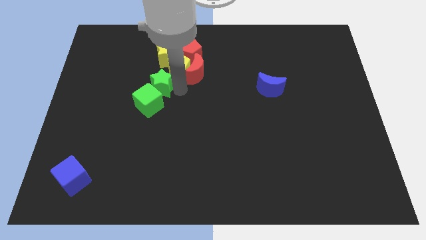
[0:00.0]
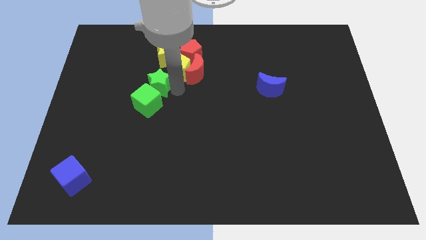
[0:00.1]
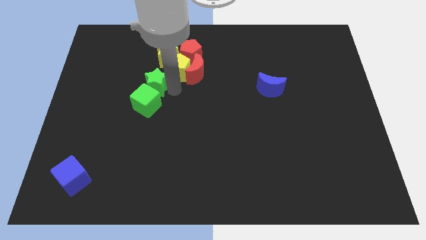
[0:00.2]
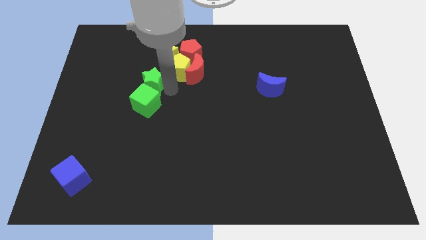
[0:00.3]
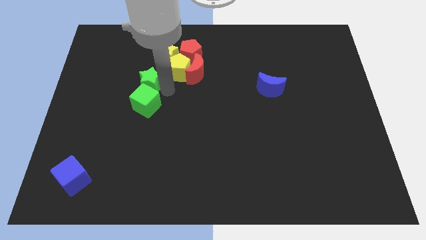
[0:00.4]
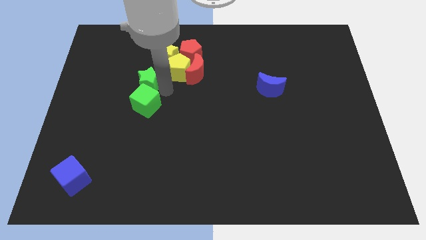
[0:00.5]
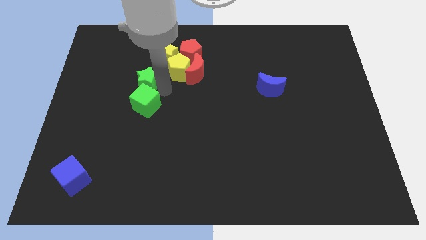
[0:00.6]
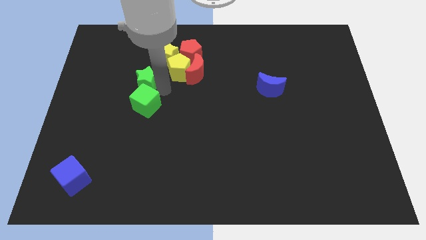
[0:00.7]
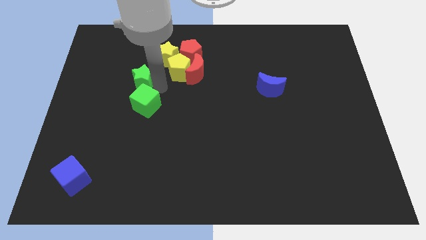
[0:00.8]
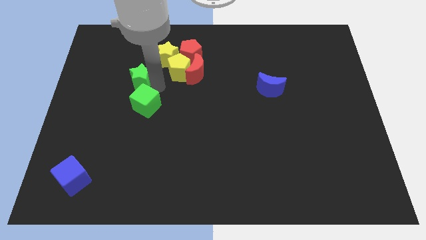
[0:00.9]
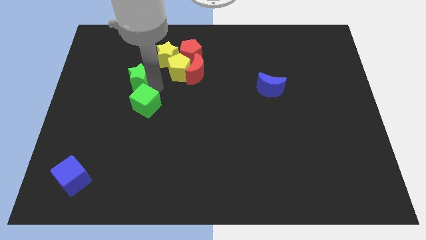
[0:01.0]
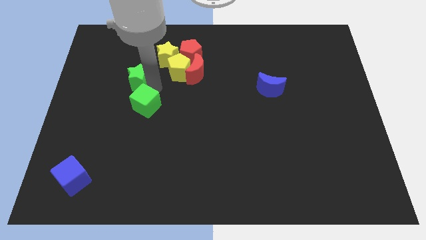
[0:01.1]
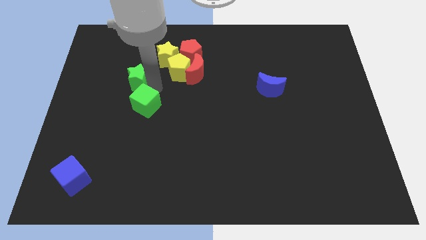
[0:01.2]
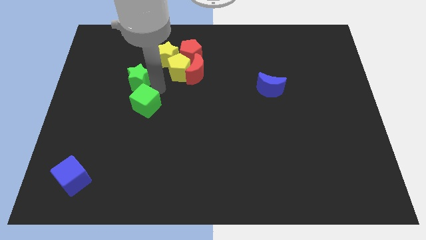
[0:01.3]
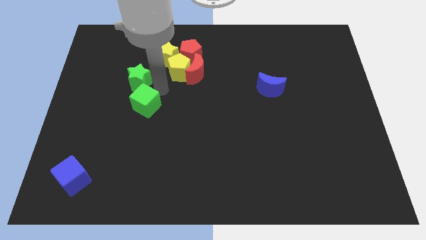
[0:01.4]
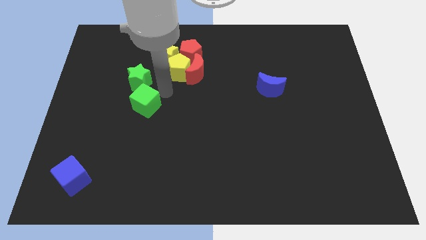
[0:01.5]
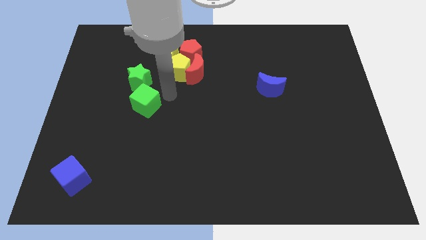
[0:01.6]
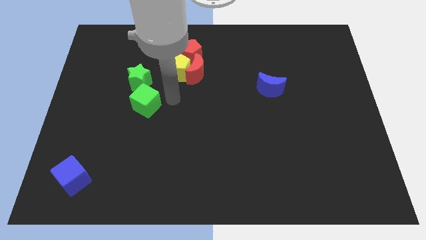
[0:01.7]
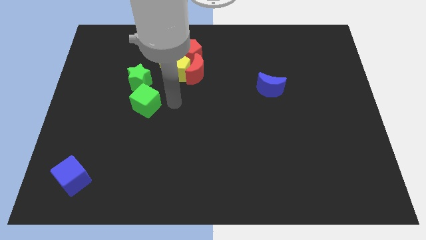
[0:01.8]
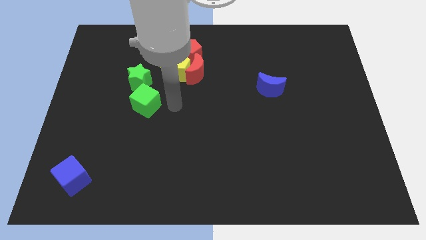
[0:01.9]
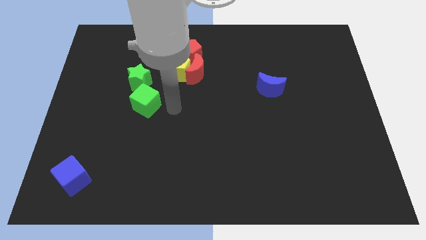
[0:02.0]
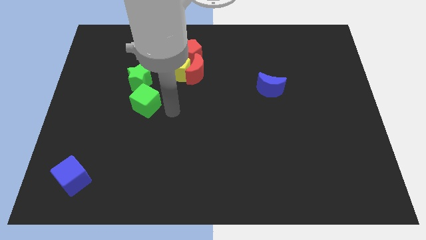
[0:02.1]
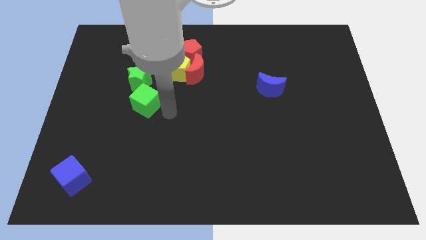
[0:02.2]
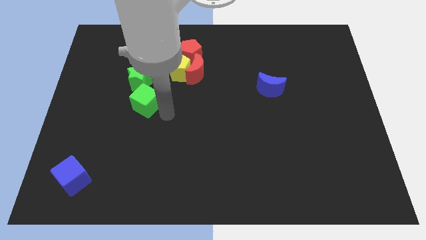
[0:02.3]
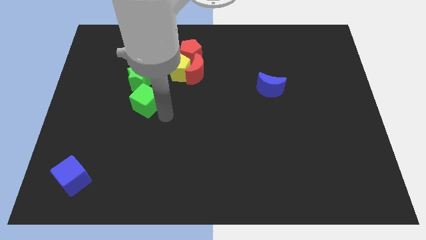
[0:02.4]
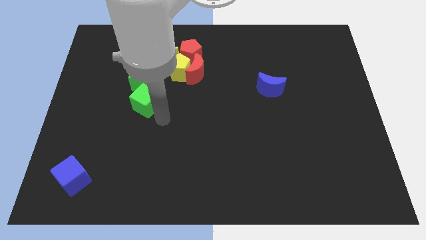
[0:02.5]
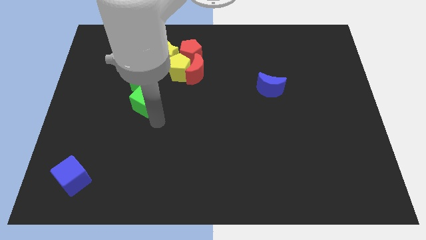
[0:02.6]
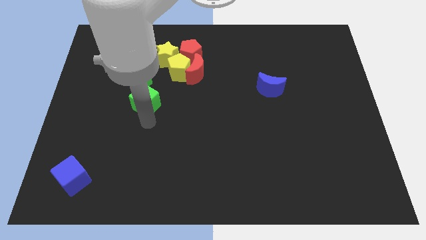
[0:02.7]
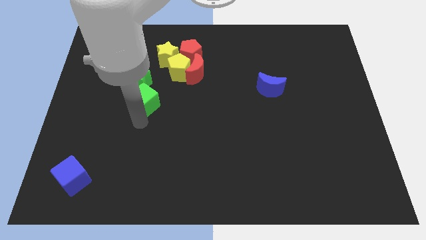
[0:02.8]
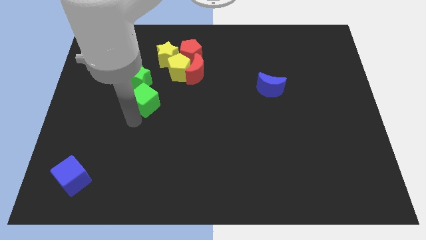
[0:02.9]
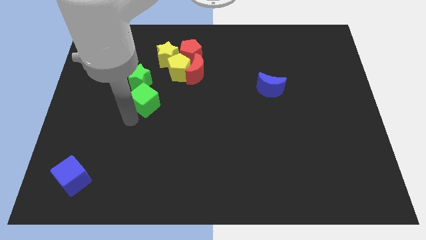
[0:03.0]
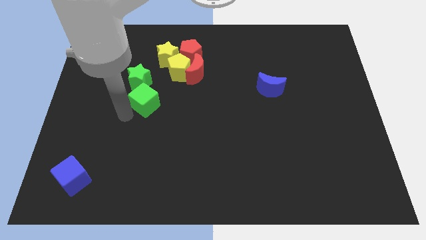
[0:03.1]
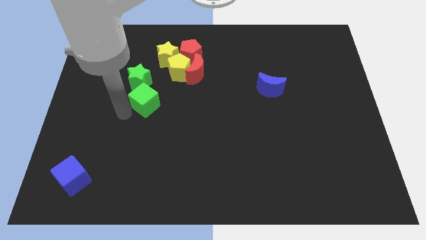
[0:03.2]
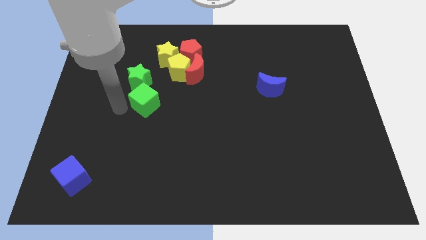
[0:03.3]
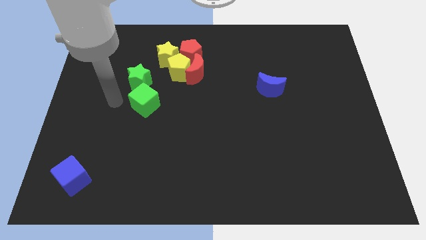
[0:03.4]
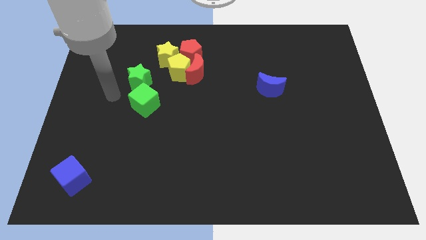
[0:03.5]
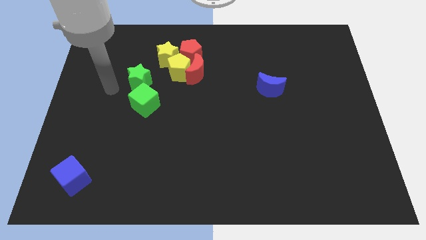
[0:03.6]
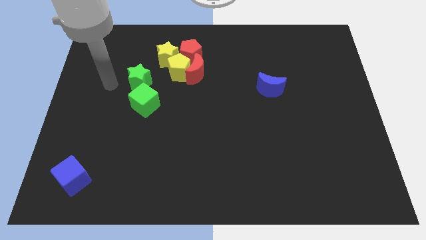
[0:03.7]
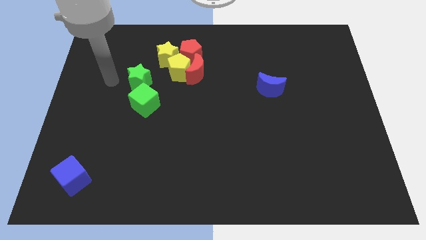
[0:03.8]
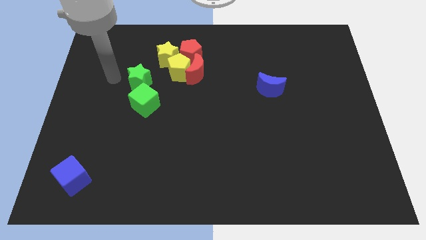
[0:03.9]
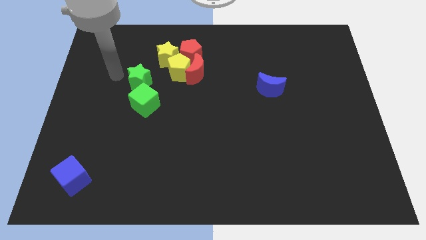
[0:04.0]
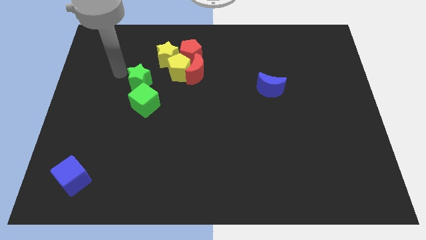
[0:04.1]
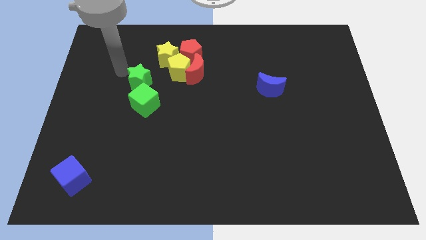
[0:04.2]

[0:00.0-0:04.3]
slightly move the green star slightly to the left

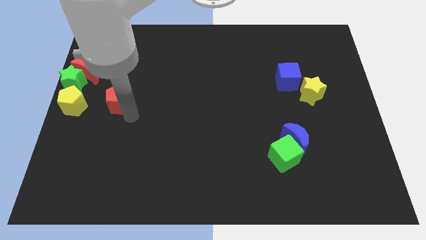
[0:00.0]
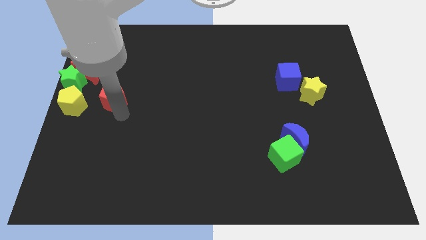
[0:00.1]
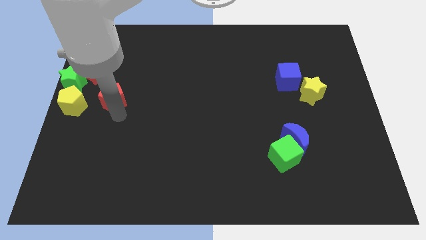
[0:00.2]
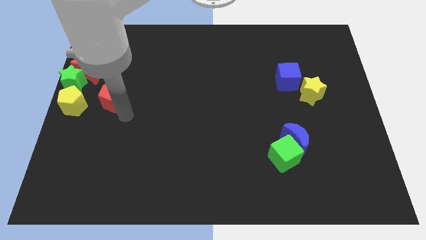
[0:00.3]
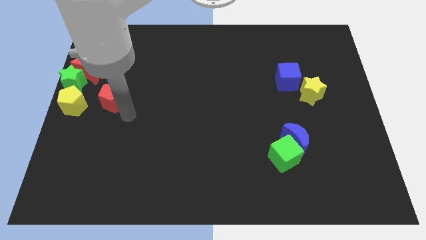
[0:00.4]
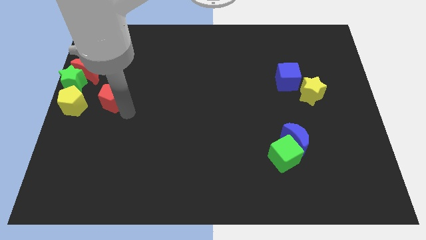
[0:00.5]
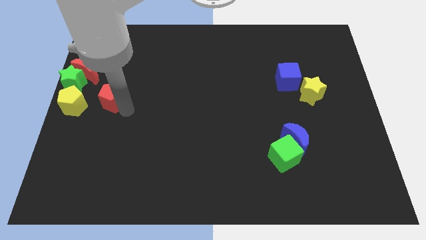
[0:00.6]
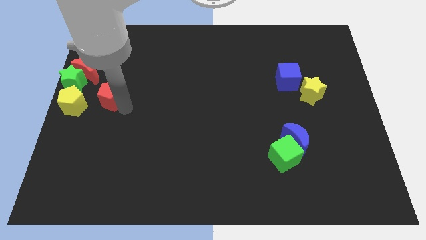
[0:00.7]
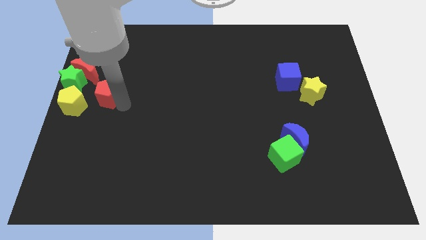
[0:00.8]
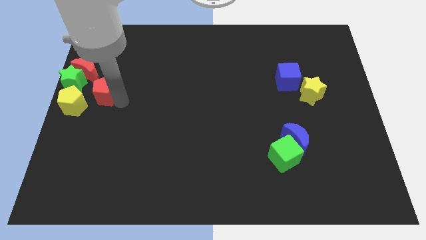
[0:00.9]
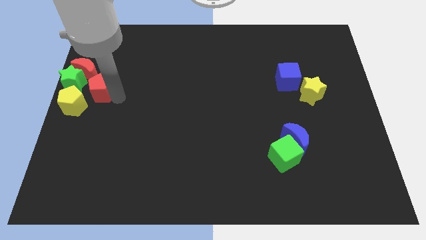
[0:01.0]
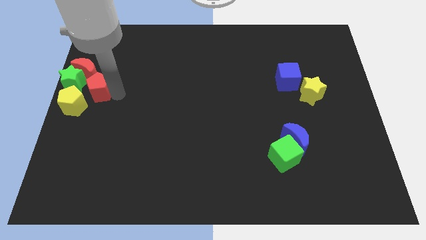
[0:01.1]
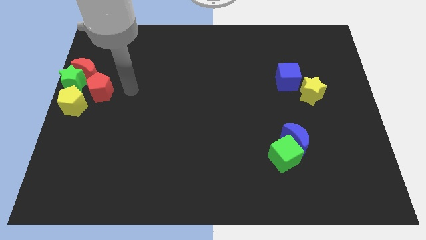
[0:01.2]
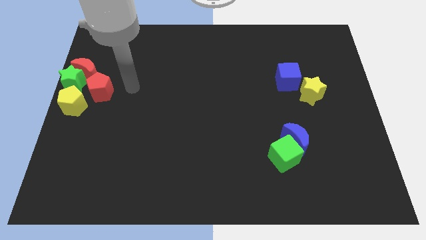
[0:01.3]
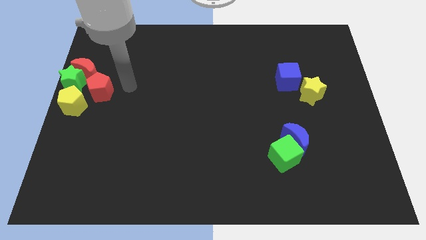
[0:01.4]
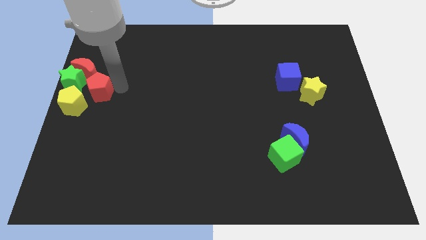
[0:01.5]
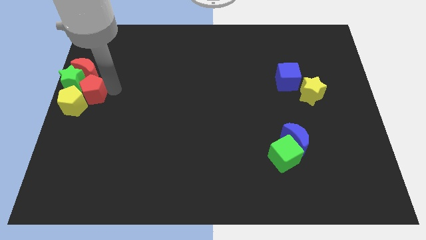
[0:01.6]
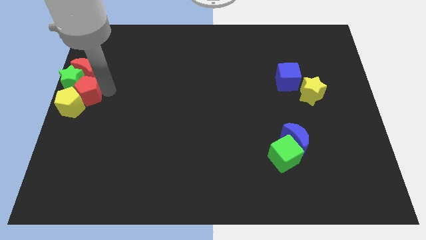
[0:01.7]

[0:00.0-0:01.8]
move the red pentagon into the yellow pentagon

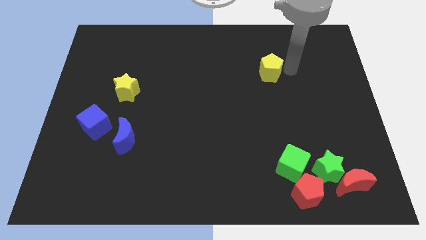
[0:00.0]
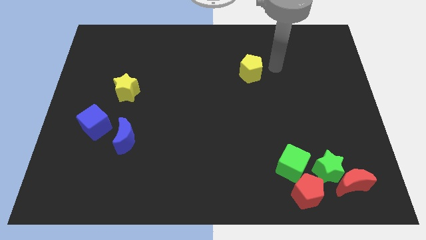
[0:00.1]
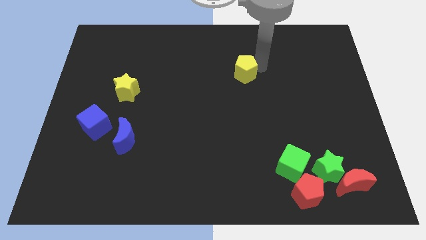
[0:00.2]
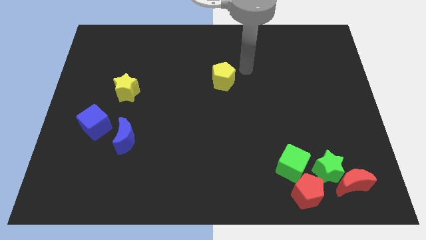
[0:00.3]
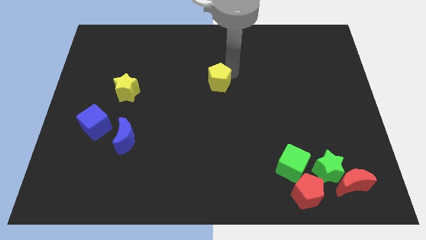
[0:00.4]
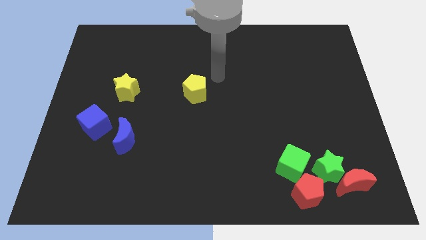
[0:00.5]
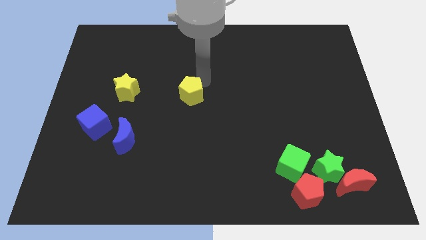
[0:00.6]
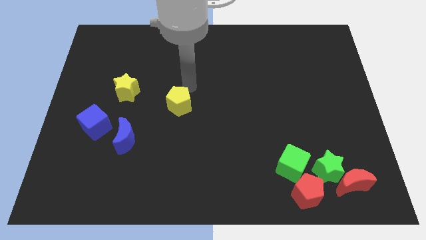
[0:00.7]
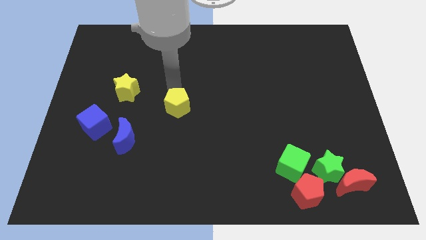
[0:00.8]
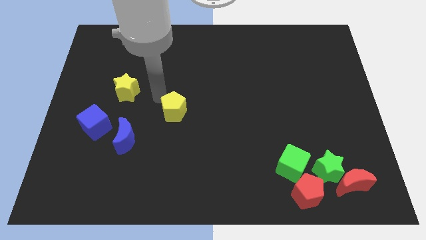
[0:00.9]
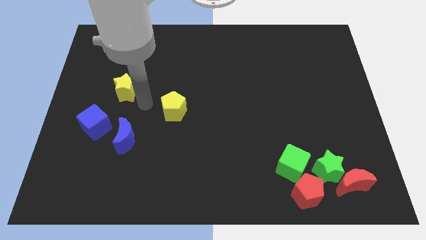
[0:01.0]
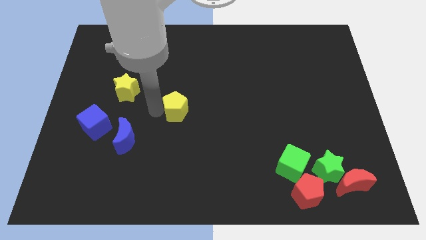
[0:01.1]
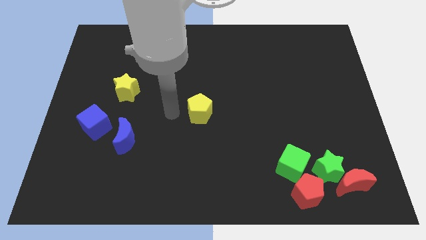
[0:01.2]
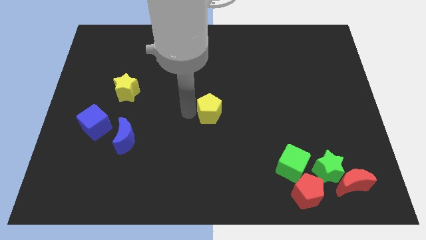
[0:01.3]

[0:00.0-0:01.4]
push the yellow pentagon to the center of the board

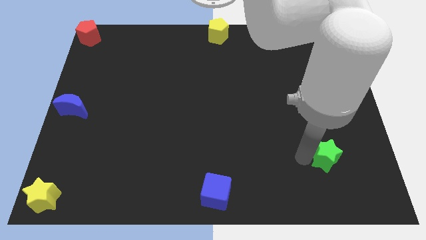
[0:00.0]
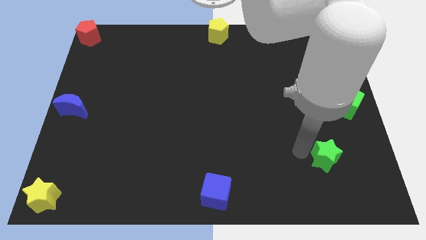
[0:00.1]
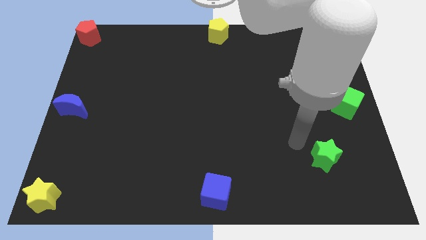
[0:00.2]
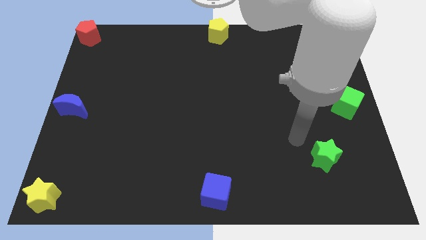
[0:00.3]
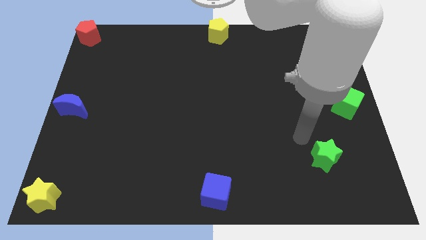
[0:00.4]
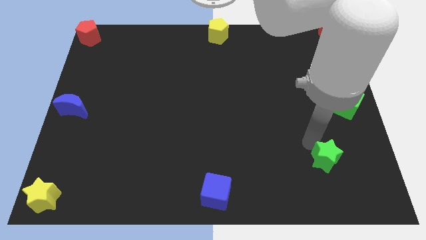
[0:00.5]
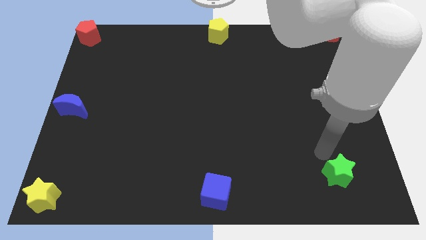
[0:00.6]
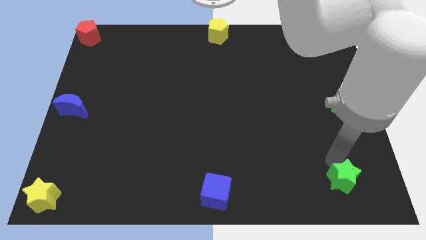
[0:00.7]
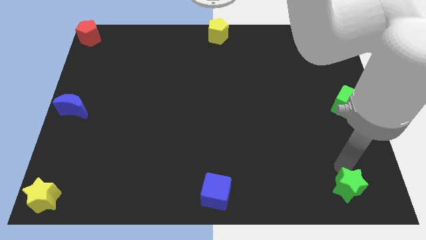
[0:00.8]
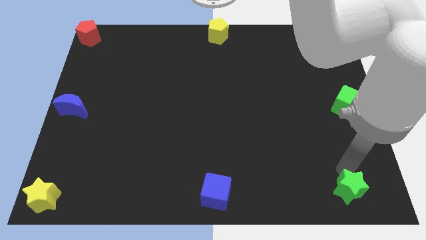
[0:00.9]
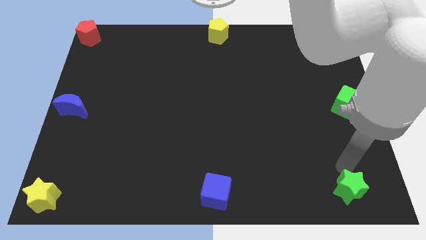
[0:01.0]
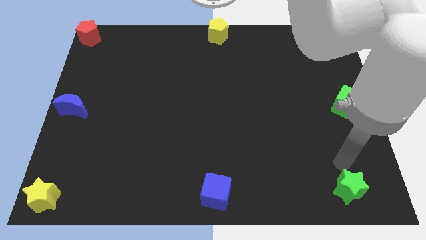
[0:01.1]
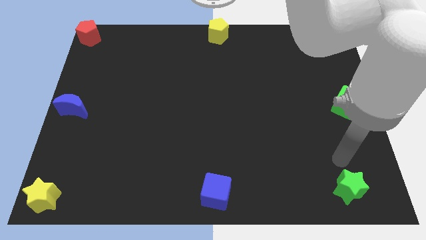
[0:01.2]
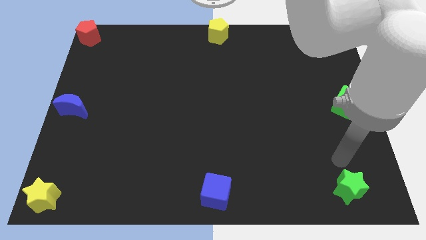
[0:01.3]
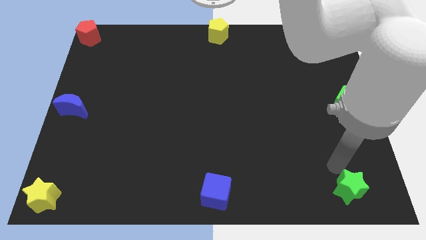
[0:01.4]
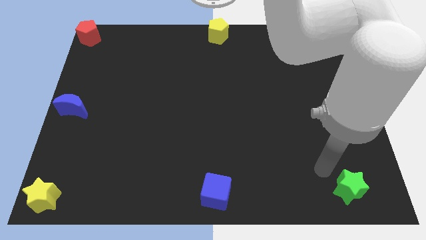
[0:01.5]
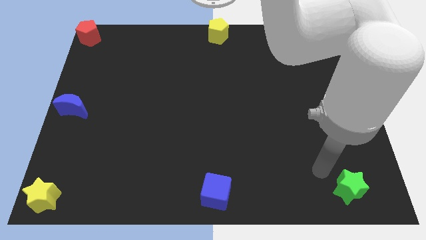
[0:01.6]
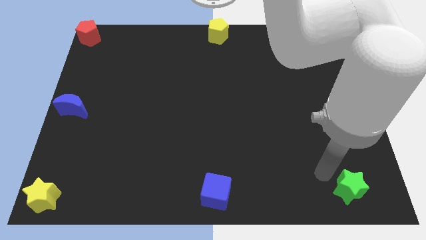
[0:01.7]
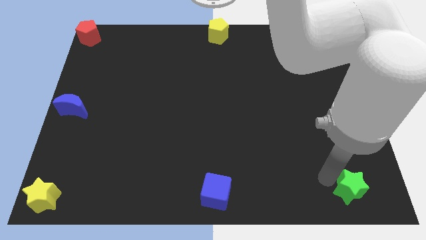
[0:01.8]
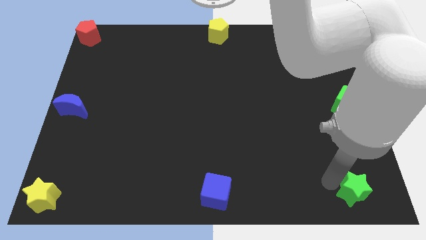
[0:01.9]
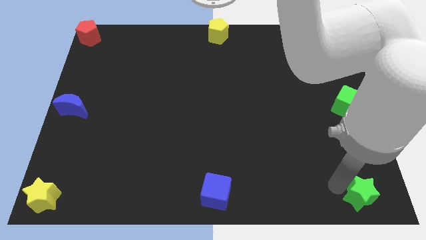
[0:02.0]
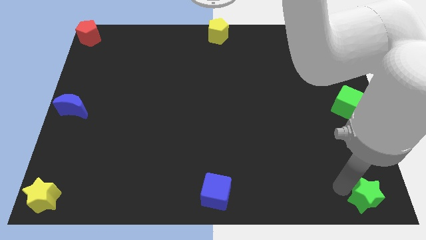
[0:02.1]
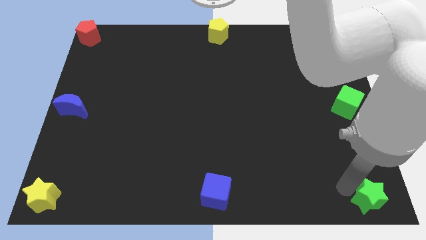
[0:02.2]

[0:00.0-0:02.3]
push the green star towards the bottom right corner of the board
